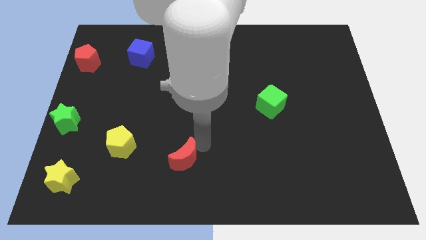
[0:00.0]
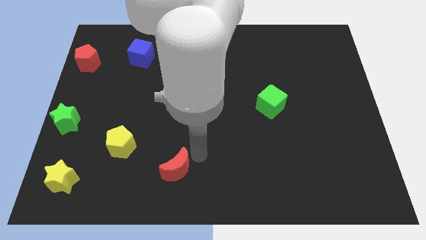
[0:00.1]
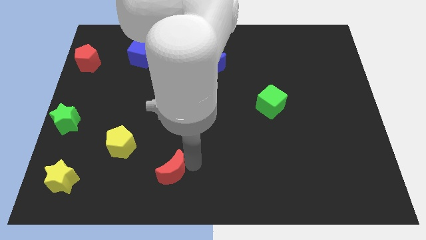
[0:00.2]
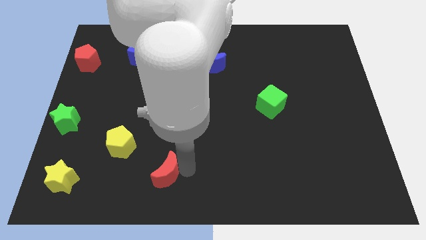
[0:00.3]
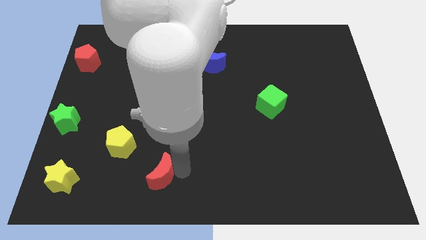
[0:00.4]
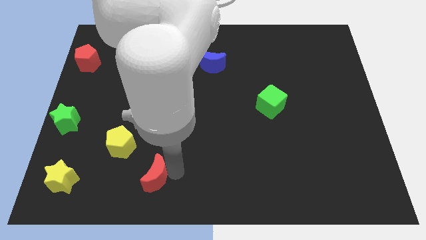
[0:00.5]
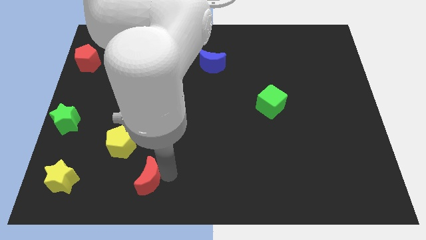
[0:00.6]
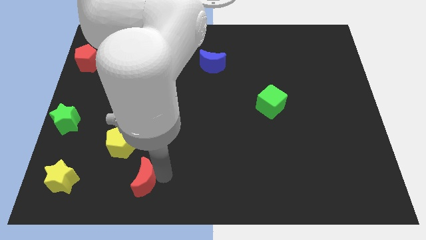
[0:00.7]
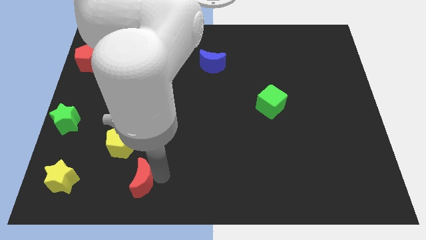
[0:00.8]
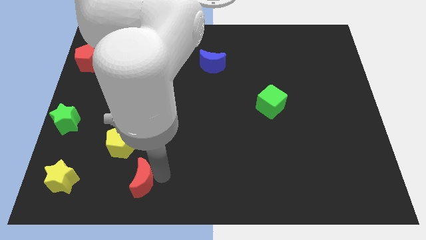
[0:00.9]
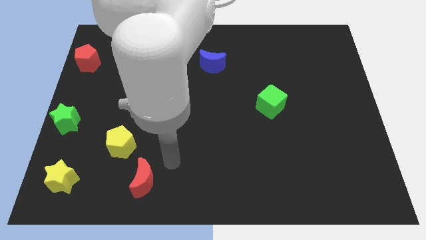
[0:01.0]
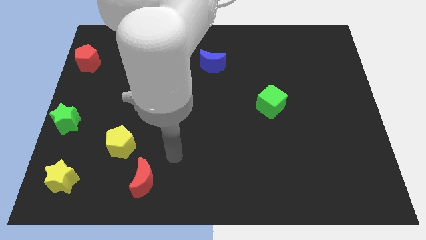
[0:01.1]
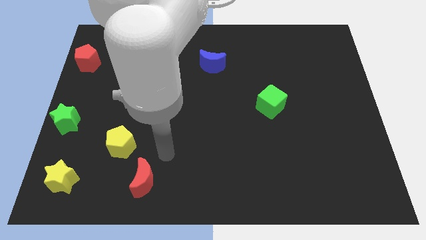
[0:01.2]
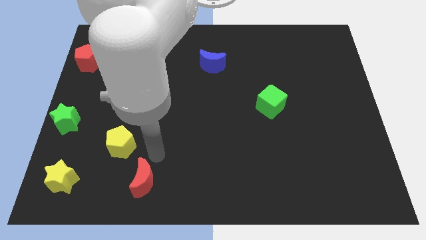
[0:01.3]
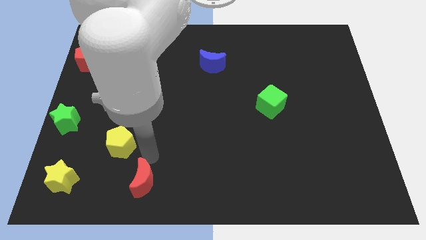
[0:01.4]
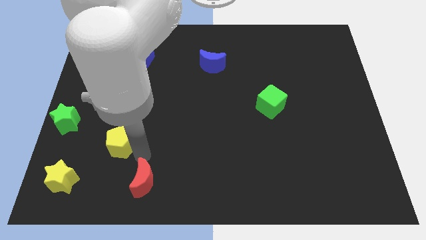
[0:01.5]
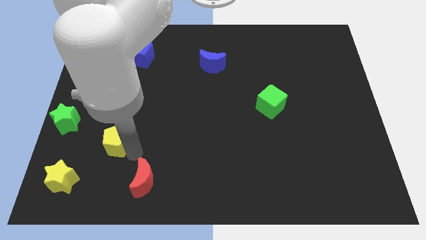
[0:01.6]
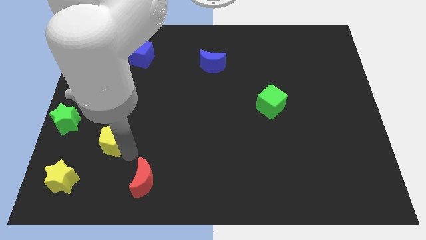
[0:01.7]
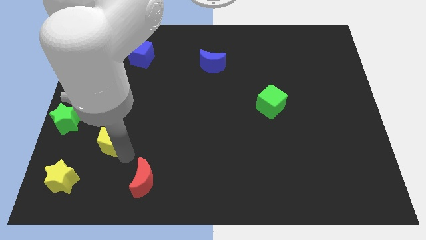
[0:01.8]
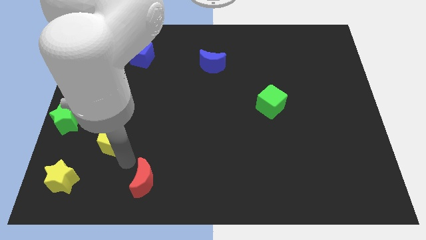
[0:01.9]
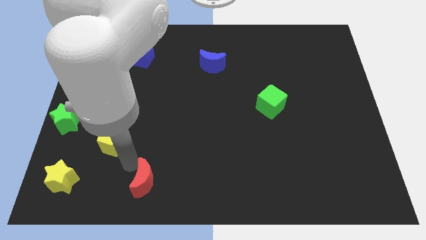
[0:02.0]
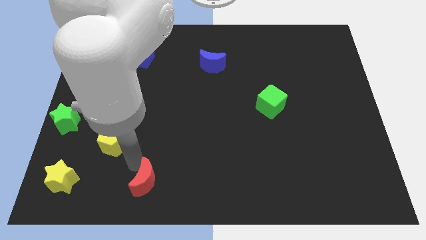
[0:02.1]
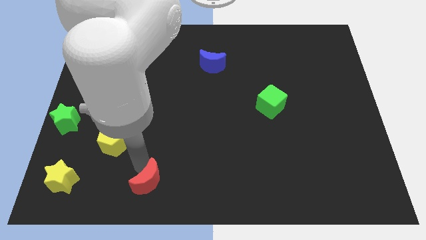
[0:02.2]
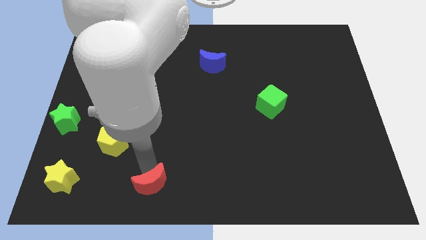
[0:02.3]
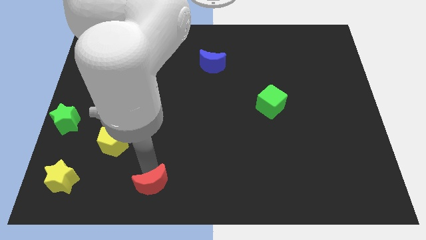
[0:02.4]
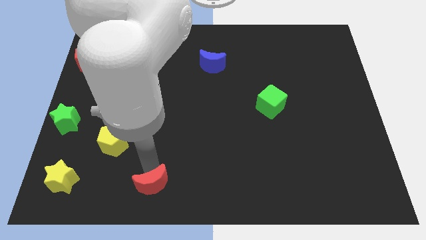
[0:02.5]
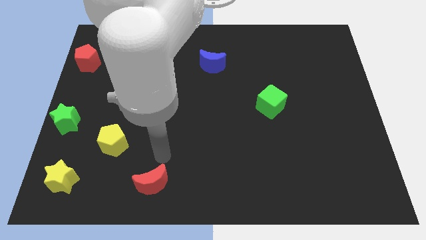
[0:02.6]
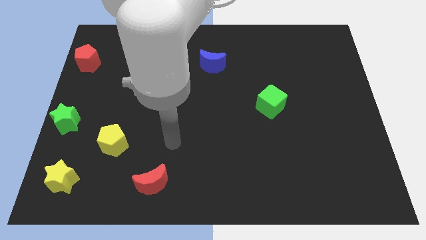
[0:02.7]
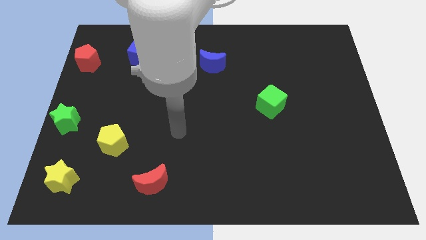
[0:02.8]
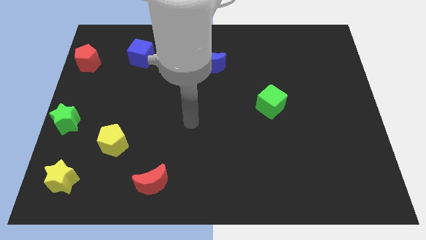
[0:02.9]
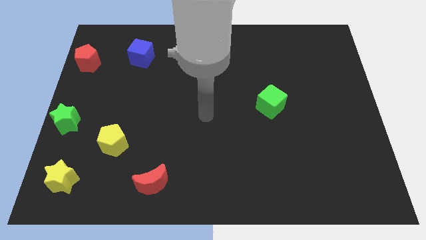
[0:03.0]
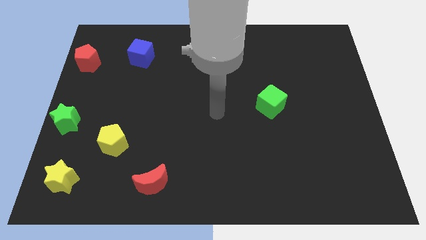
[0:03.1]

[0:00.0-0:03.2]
place red crescent right of yellow star

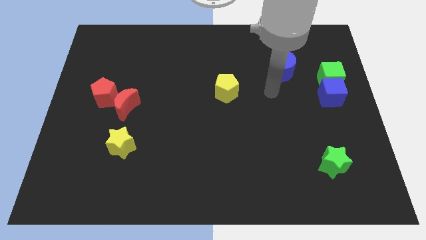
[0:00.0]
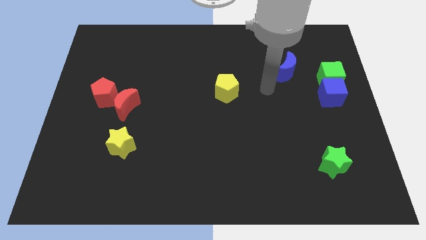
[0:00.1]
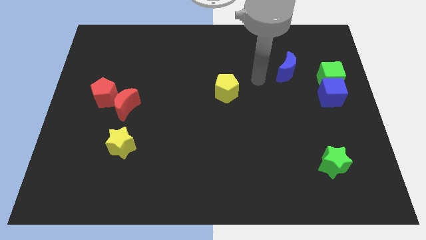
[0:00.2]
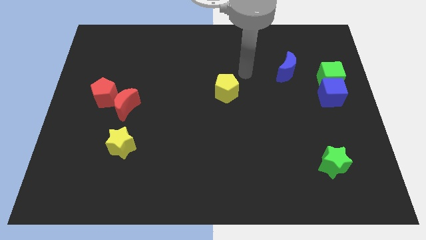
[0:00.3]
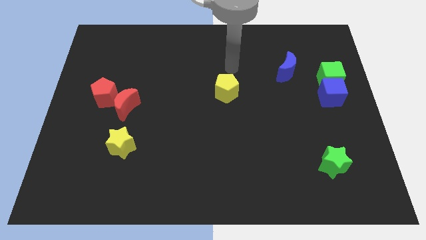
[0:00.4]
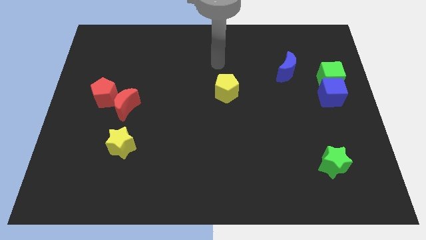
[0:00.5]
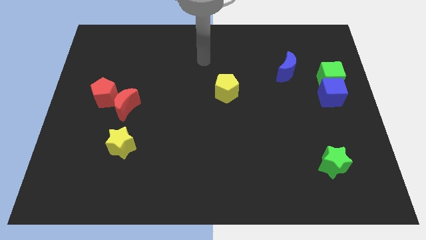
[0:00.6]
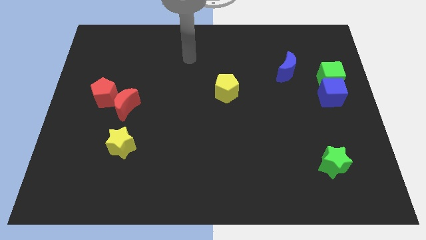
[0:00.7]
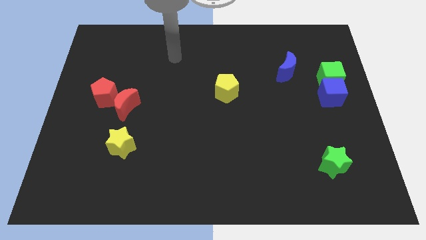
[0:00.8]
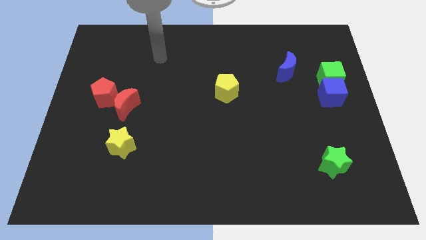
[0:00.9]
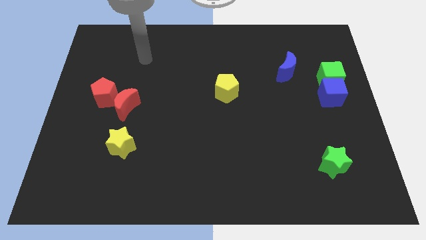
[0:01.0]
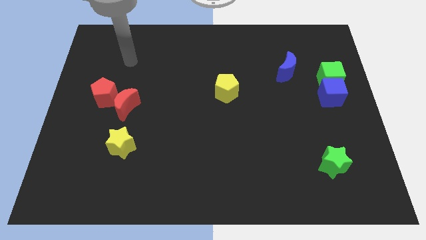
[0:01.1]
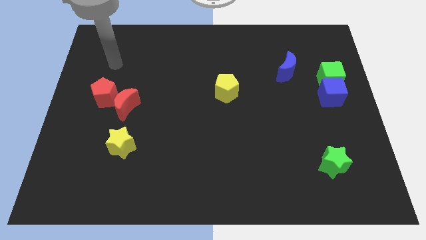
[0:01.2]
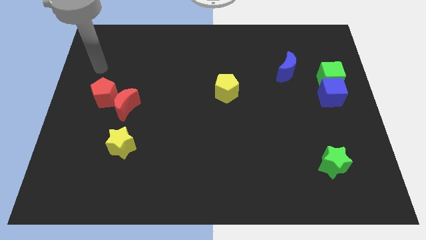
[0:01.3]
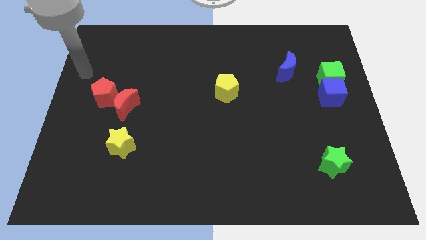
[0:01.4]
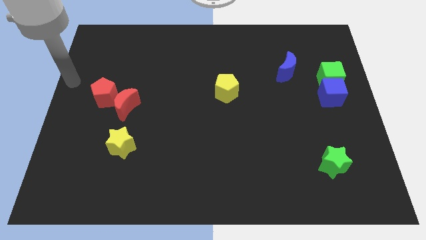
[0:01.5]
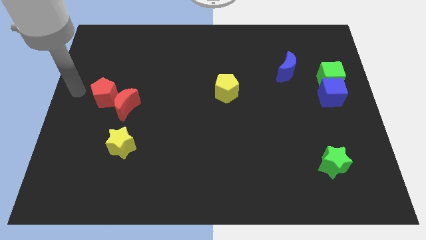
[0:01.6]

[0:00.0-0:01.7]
go near the red pentagon

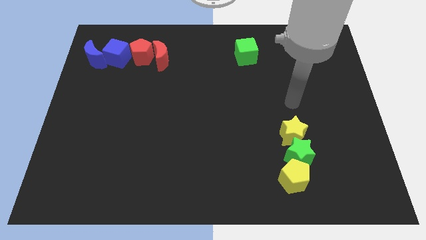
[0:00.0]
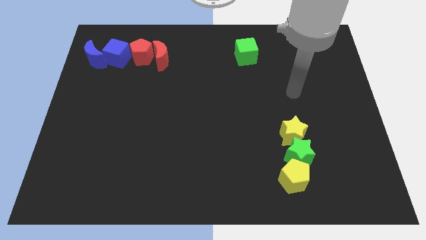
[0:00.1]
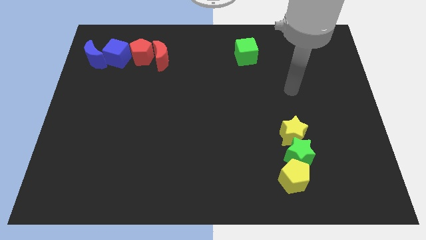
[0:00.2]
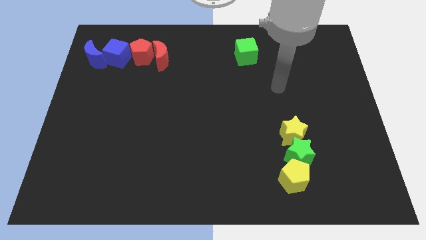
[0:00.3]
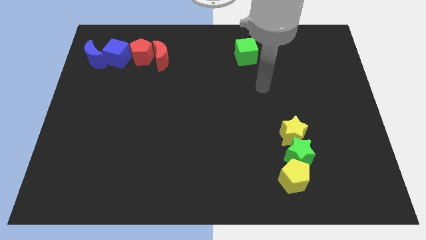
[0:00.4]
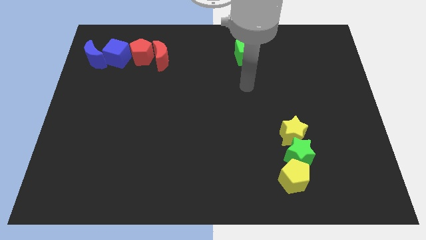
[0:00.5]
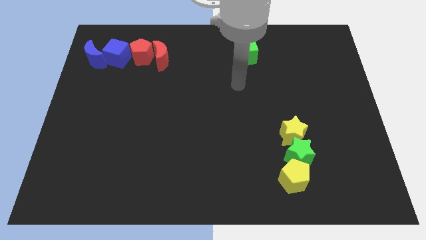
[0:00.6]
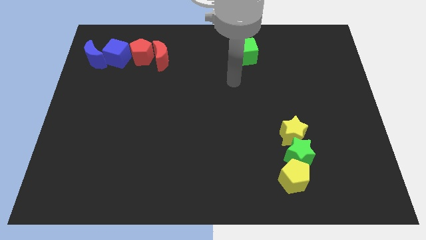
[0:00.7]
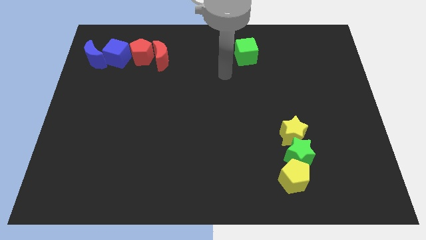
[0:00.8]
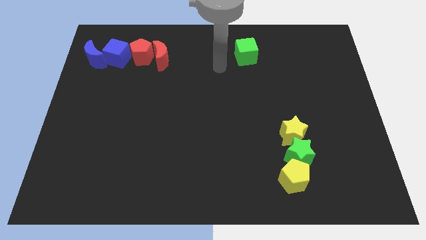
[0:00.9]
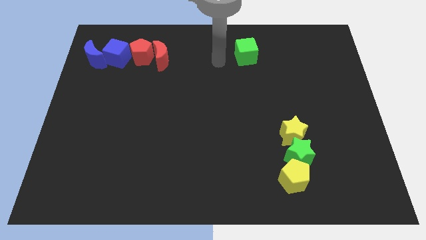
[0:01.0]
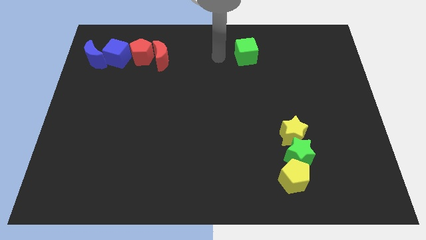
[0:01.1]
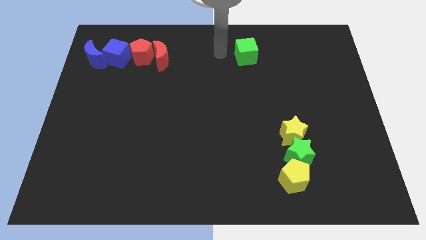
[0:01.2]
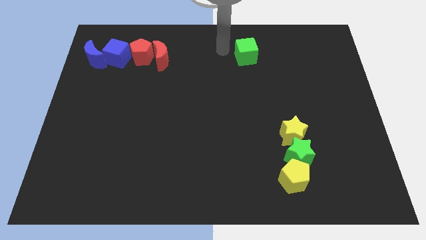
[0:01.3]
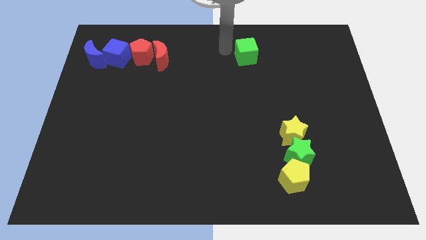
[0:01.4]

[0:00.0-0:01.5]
point your arm at the top left side of the green cube

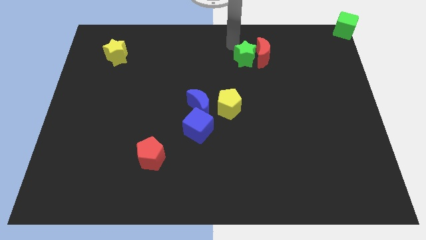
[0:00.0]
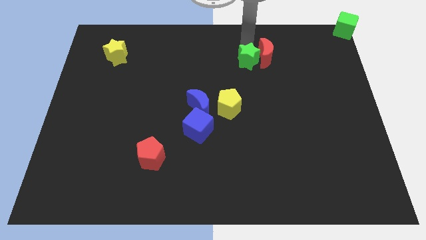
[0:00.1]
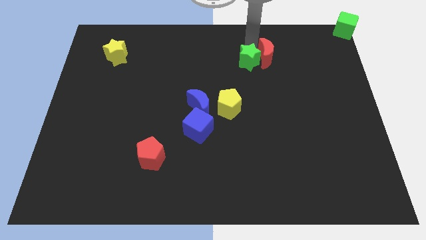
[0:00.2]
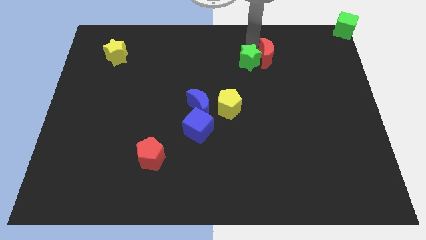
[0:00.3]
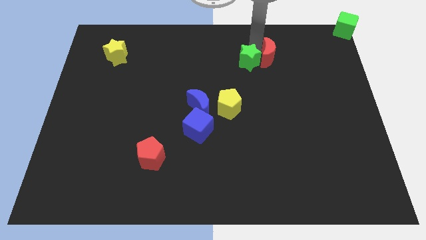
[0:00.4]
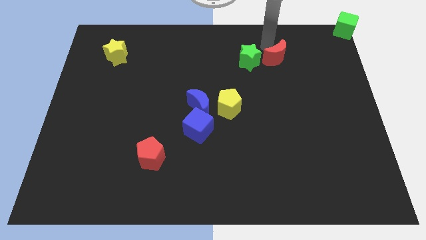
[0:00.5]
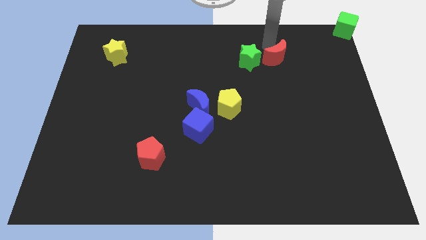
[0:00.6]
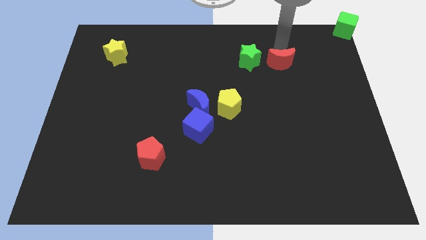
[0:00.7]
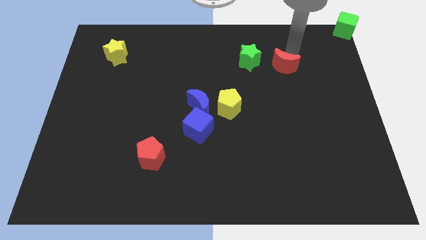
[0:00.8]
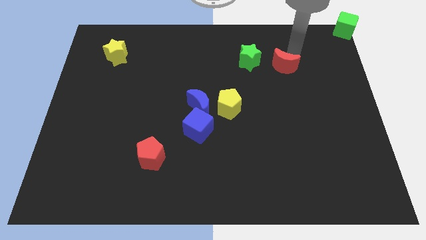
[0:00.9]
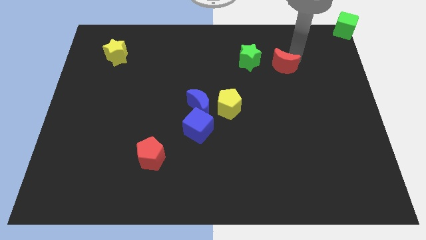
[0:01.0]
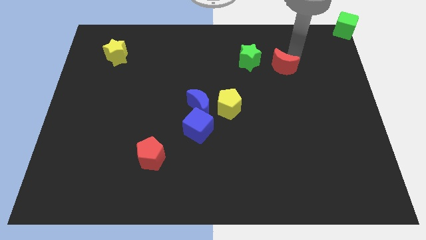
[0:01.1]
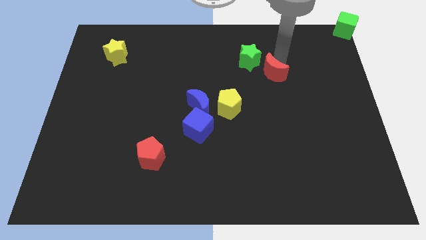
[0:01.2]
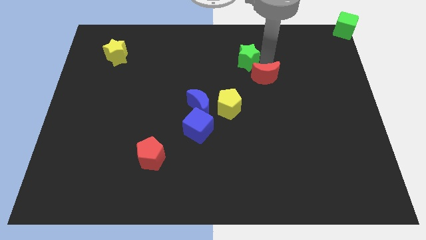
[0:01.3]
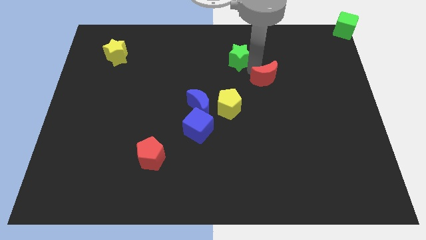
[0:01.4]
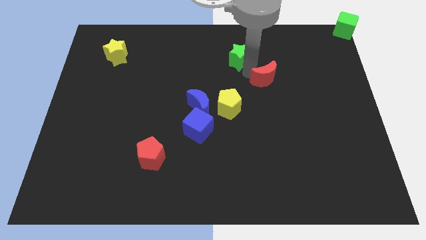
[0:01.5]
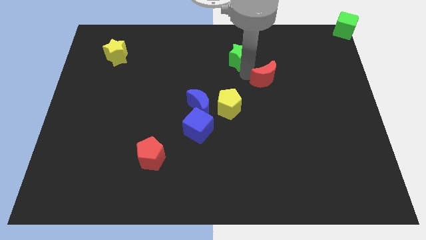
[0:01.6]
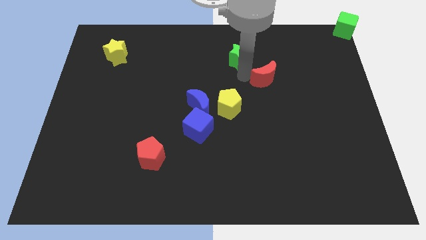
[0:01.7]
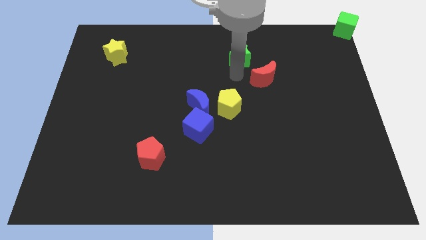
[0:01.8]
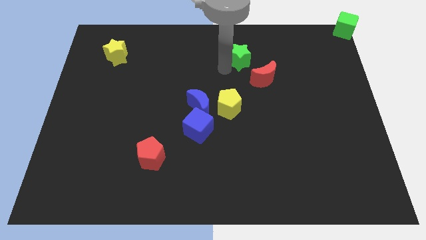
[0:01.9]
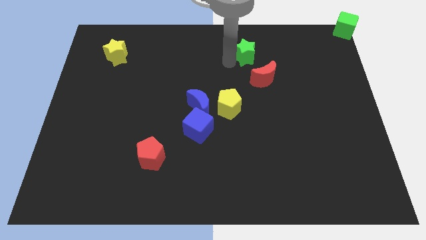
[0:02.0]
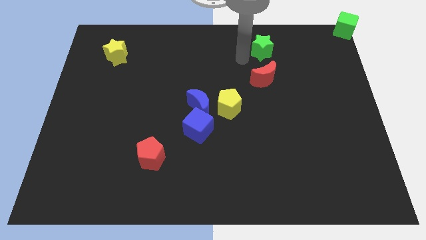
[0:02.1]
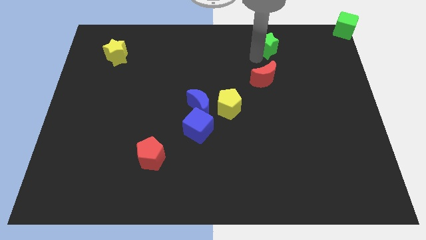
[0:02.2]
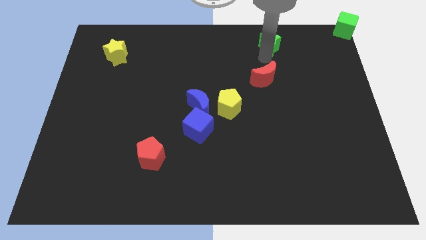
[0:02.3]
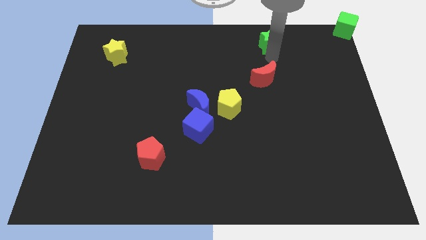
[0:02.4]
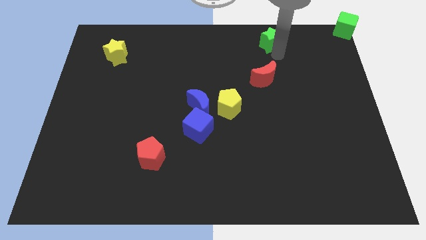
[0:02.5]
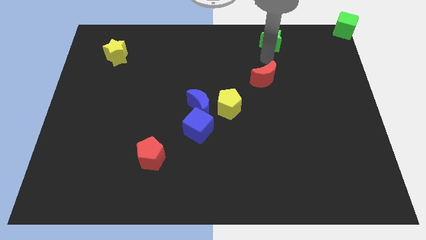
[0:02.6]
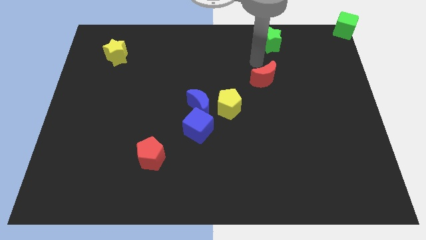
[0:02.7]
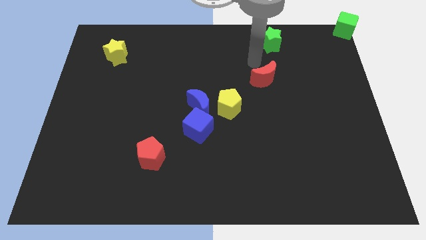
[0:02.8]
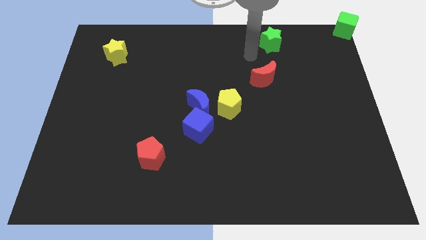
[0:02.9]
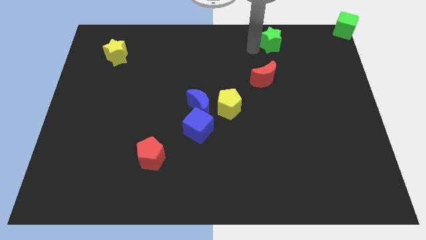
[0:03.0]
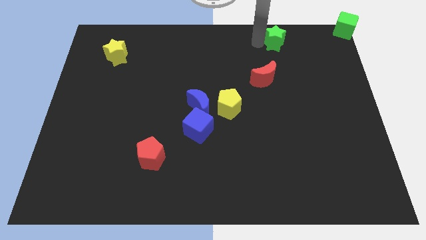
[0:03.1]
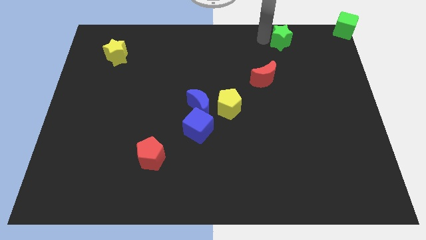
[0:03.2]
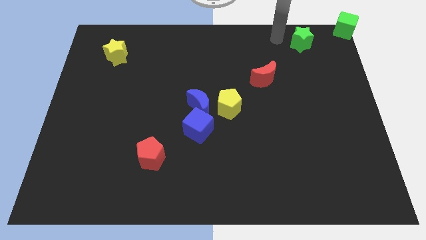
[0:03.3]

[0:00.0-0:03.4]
push green star and red crescent apart
